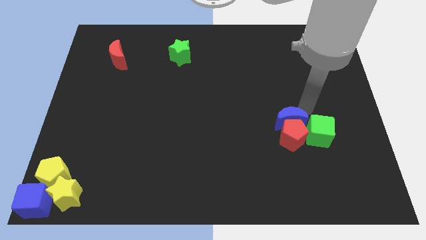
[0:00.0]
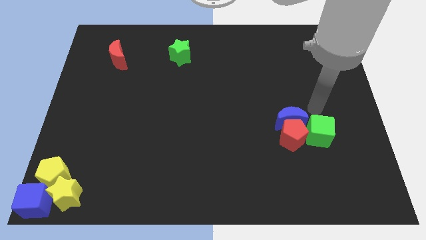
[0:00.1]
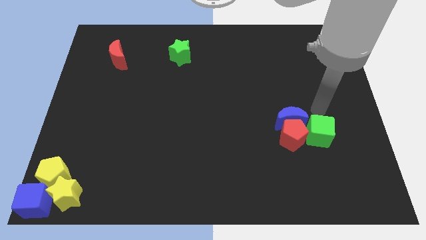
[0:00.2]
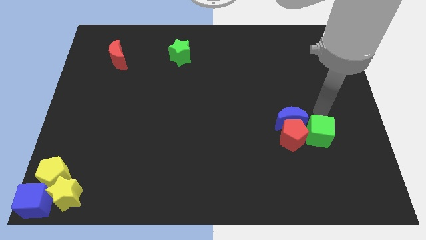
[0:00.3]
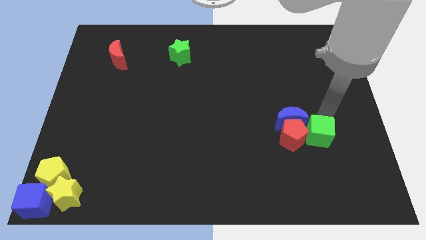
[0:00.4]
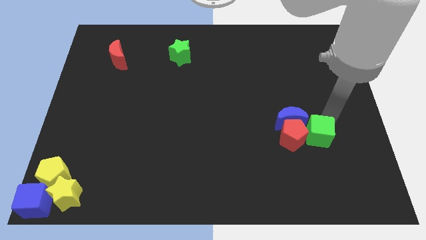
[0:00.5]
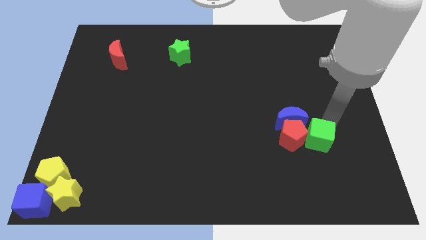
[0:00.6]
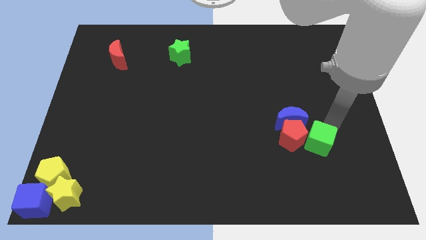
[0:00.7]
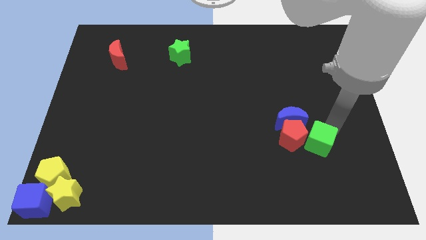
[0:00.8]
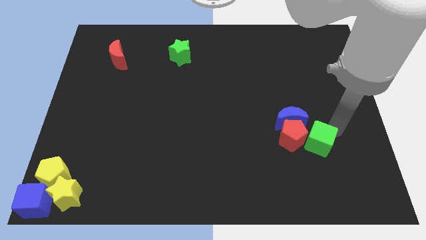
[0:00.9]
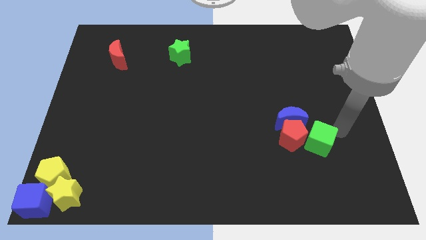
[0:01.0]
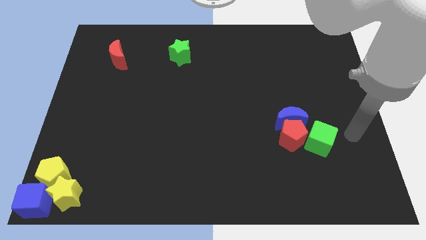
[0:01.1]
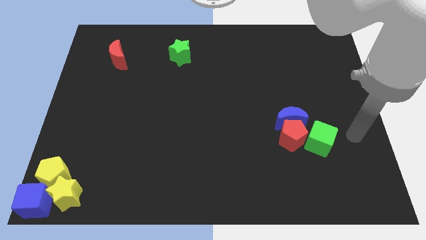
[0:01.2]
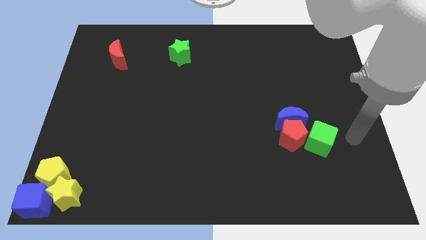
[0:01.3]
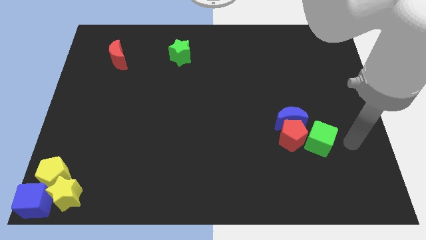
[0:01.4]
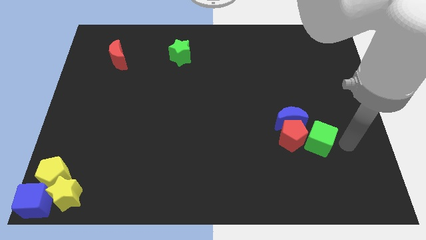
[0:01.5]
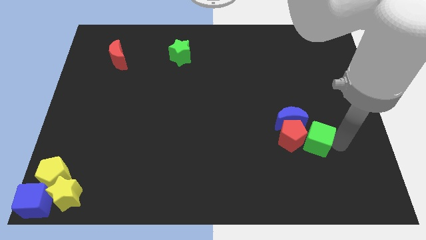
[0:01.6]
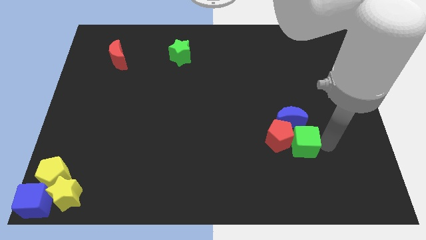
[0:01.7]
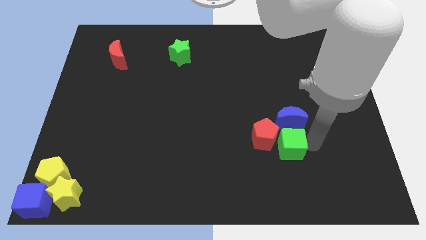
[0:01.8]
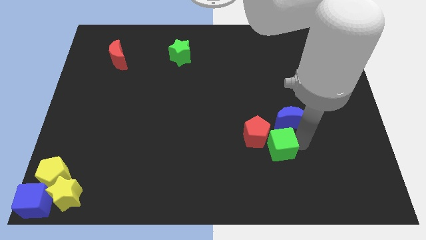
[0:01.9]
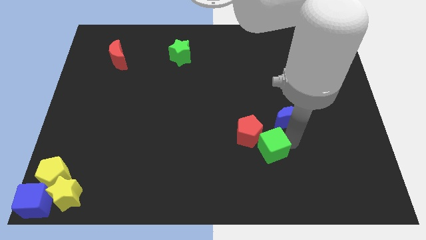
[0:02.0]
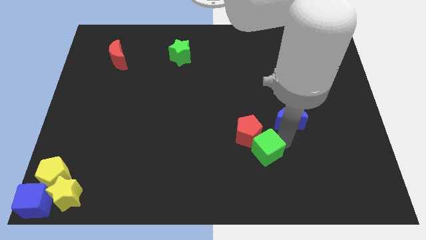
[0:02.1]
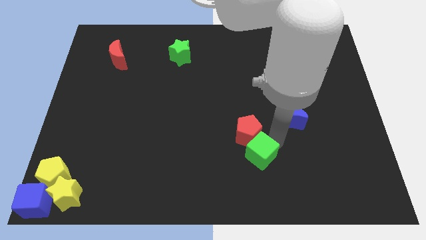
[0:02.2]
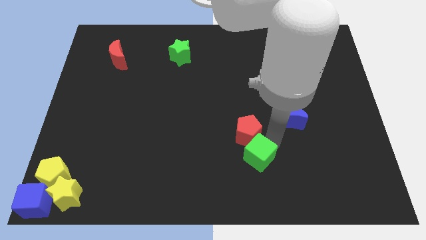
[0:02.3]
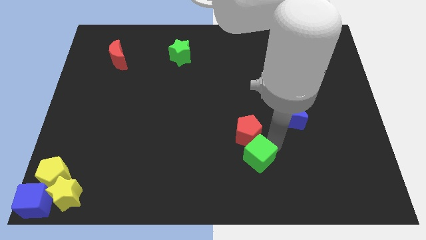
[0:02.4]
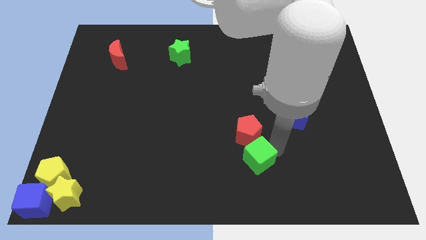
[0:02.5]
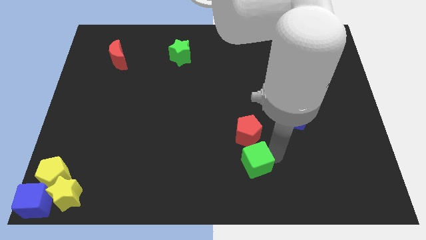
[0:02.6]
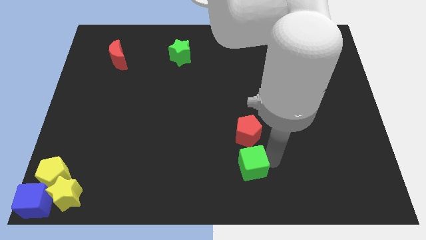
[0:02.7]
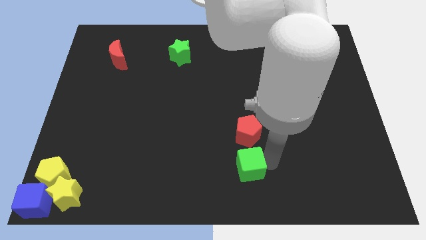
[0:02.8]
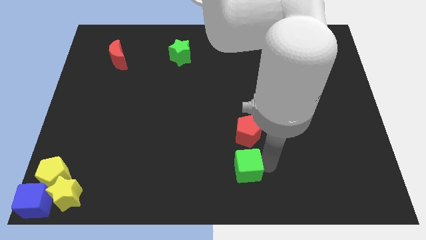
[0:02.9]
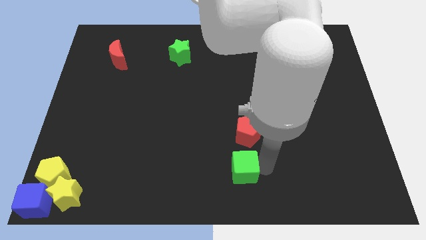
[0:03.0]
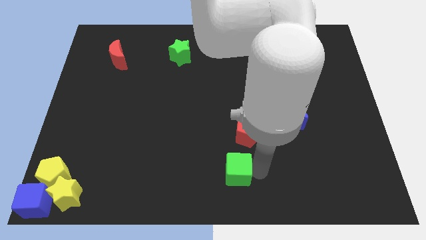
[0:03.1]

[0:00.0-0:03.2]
place the green cube at the bottom of the red pentagon

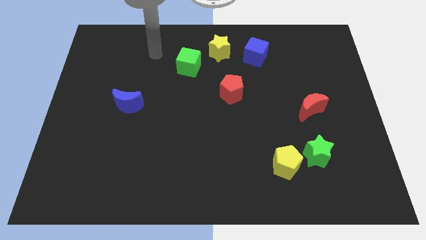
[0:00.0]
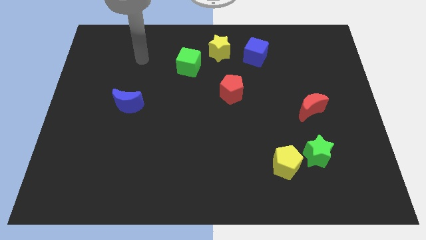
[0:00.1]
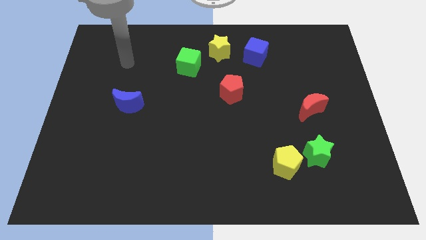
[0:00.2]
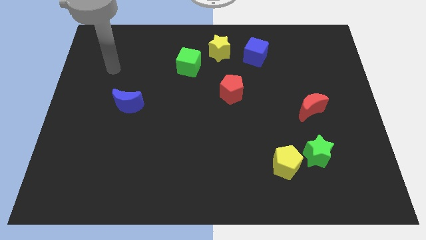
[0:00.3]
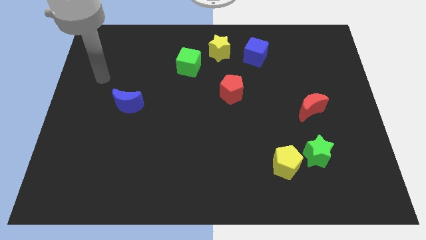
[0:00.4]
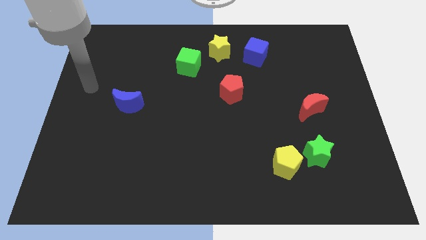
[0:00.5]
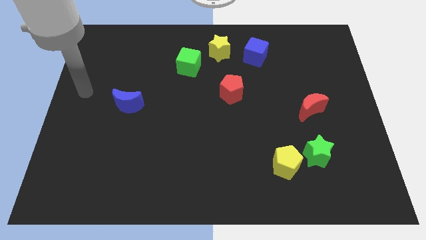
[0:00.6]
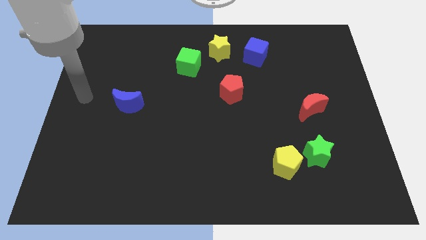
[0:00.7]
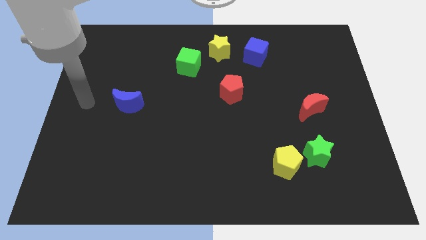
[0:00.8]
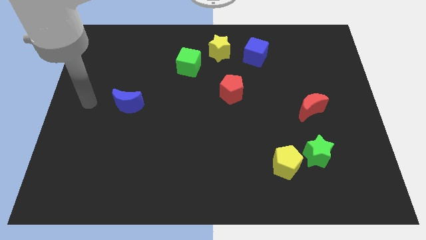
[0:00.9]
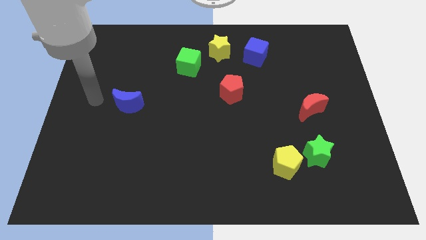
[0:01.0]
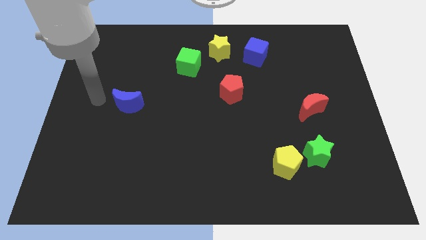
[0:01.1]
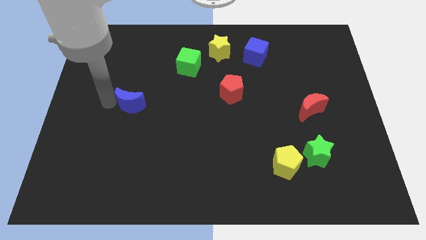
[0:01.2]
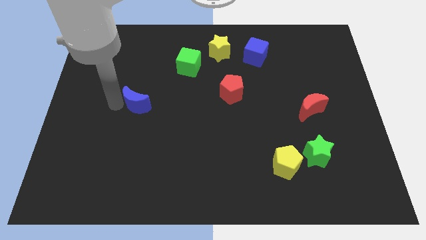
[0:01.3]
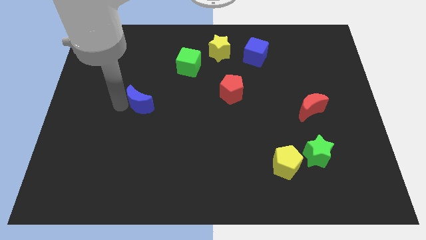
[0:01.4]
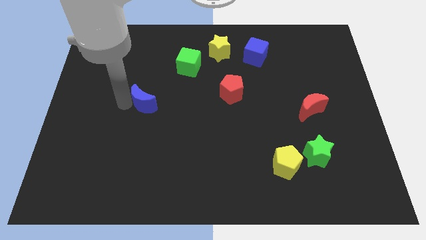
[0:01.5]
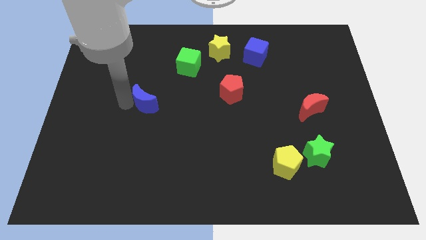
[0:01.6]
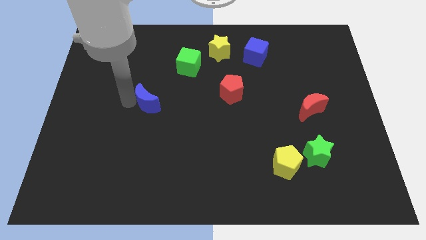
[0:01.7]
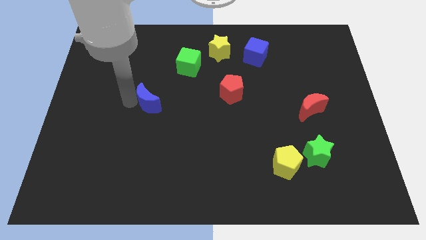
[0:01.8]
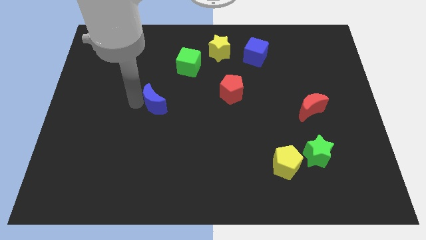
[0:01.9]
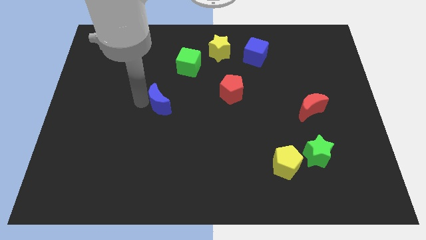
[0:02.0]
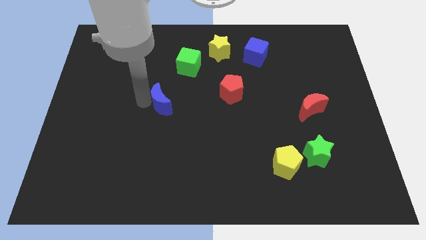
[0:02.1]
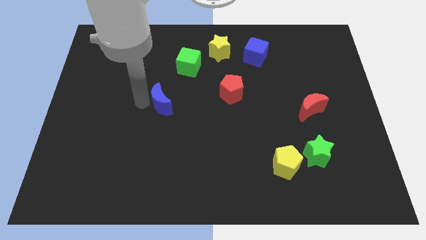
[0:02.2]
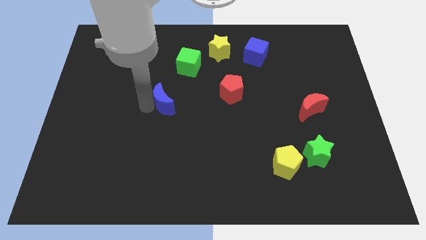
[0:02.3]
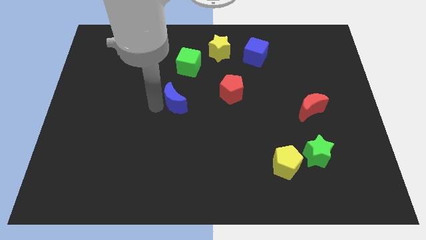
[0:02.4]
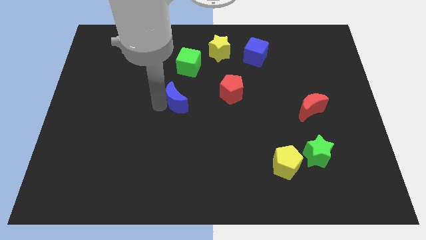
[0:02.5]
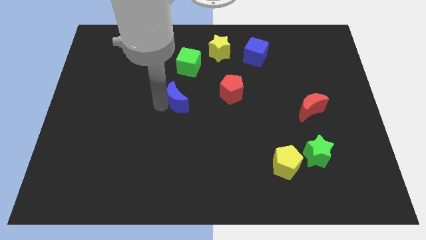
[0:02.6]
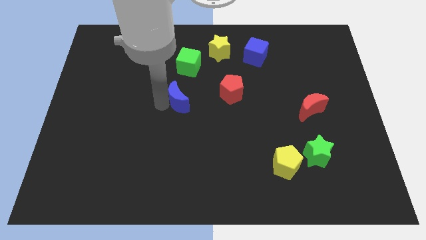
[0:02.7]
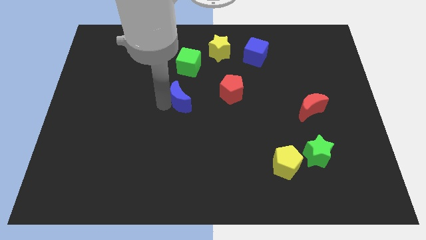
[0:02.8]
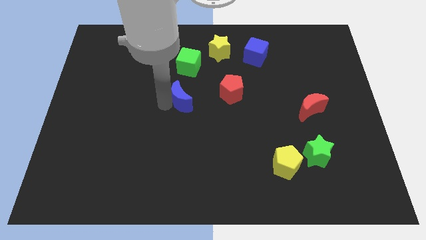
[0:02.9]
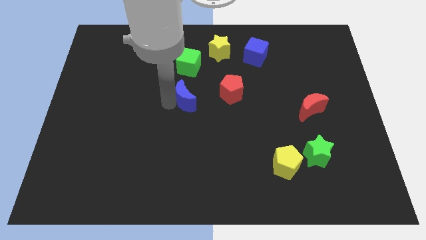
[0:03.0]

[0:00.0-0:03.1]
place blue moon below the green cube

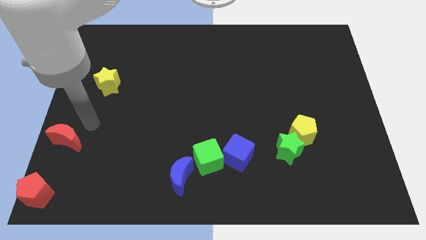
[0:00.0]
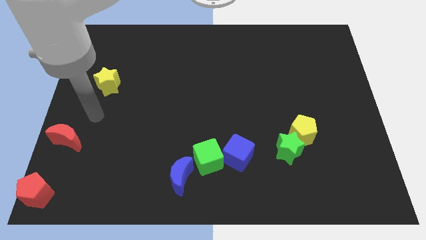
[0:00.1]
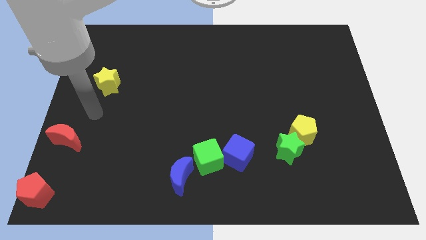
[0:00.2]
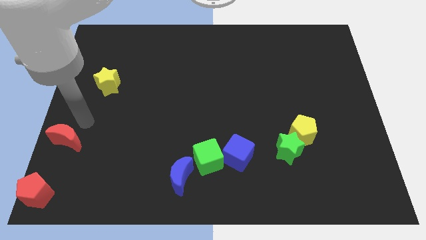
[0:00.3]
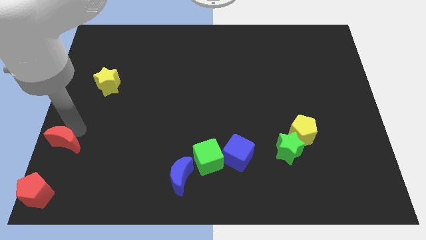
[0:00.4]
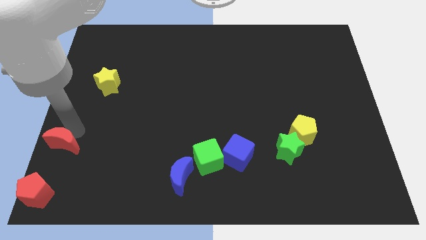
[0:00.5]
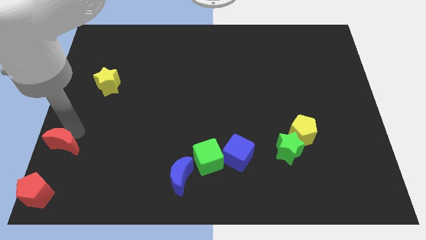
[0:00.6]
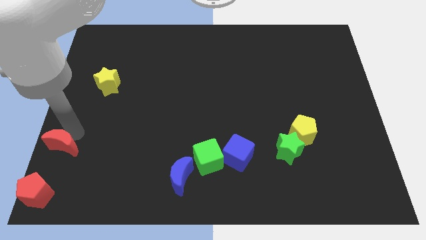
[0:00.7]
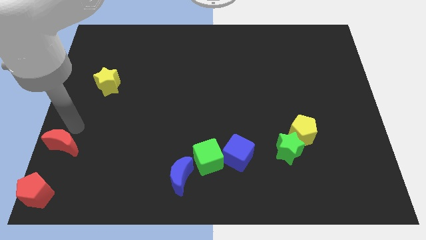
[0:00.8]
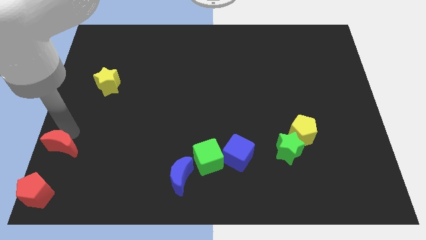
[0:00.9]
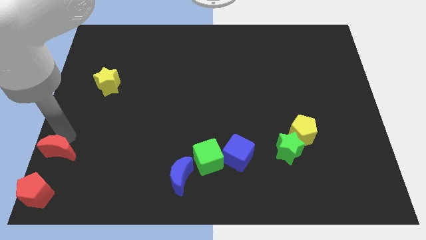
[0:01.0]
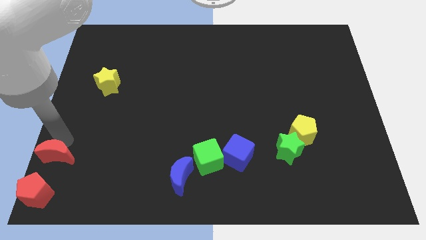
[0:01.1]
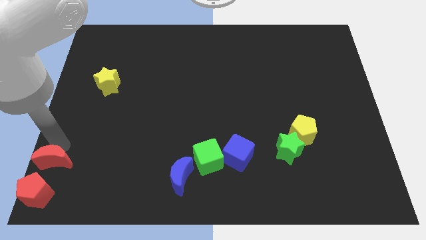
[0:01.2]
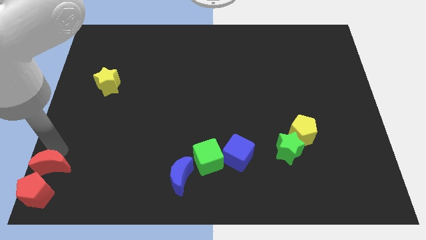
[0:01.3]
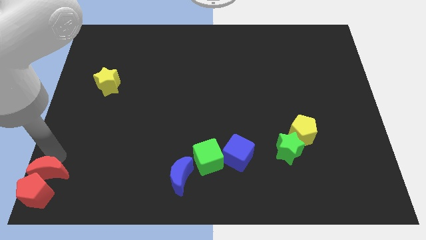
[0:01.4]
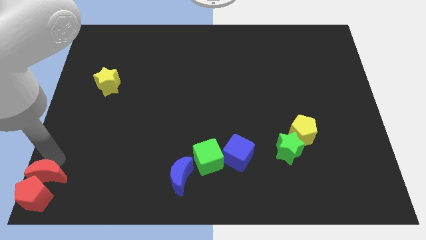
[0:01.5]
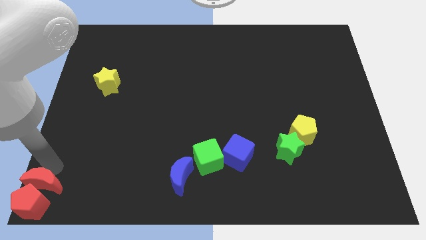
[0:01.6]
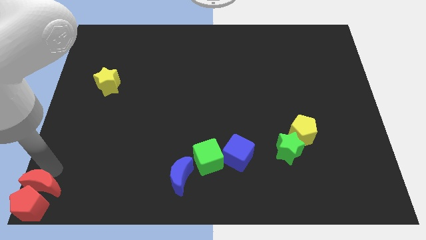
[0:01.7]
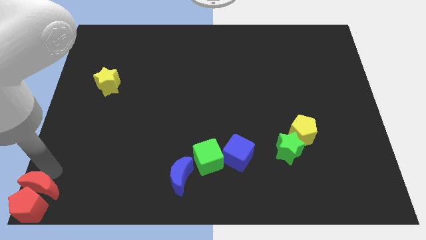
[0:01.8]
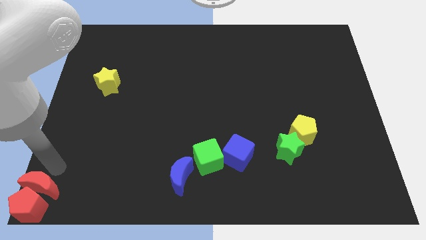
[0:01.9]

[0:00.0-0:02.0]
push the red moon into the red pentagon

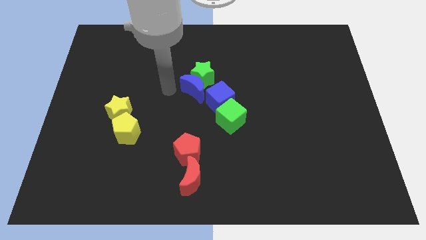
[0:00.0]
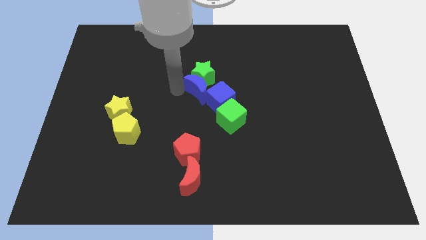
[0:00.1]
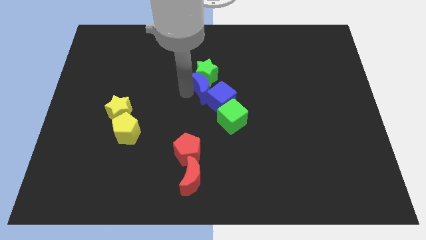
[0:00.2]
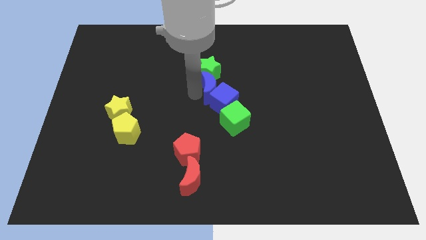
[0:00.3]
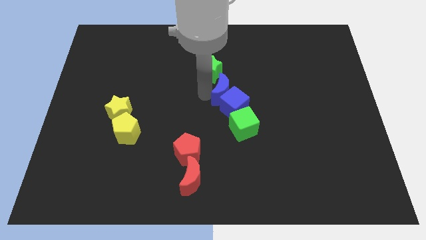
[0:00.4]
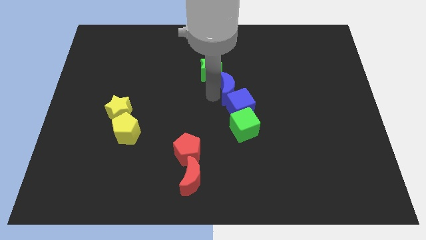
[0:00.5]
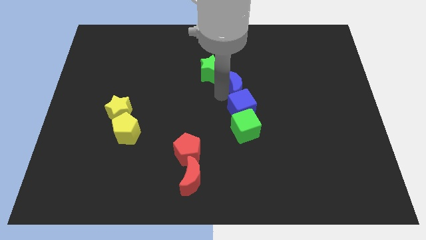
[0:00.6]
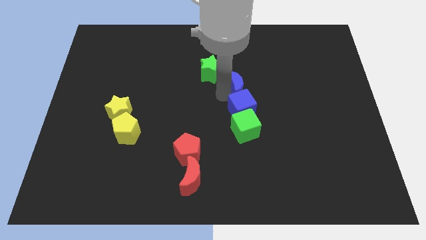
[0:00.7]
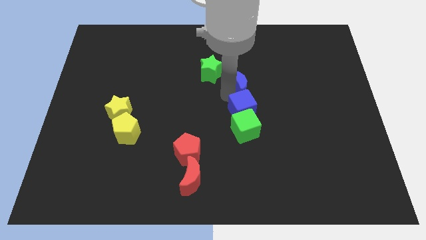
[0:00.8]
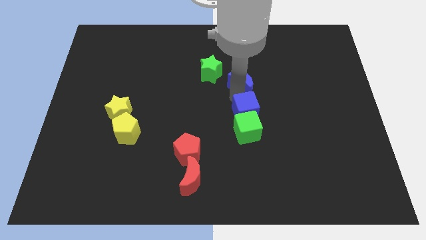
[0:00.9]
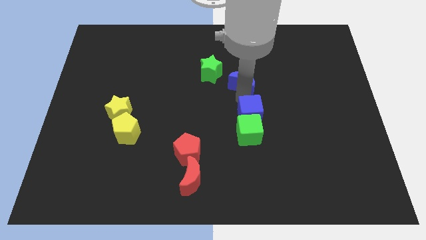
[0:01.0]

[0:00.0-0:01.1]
place your hand in between the blue blocks
